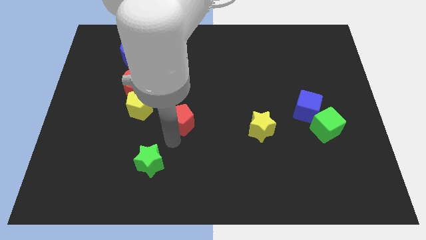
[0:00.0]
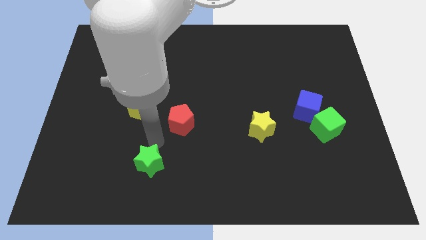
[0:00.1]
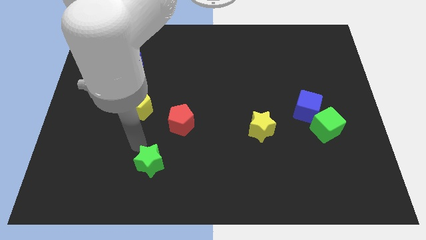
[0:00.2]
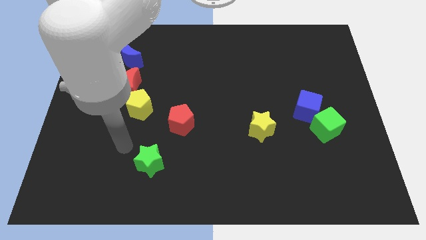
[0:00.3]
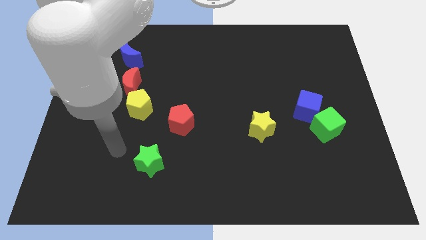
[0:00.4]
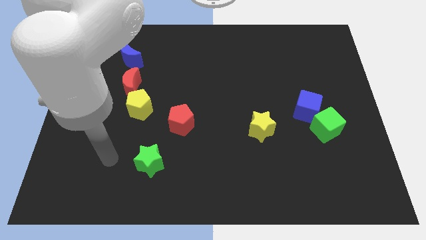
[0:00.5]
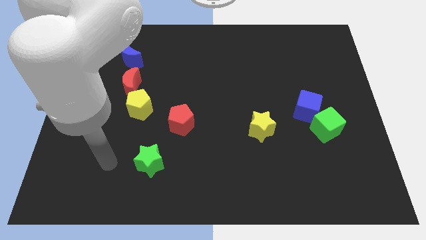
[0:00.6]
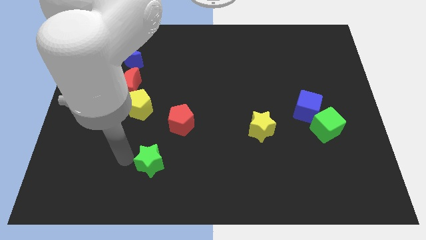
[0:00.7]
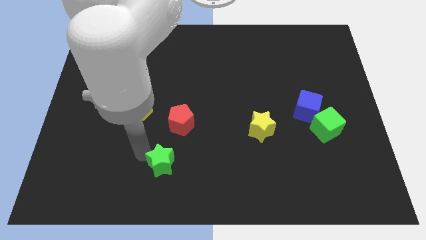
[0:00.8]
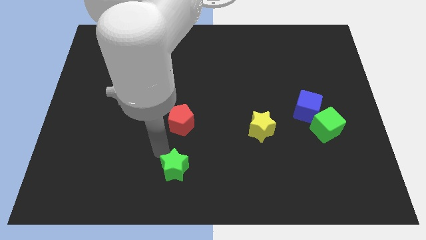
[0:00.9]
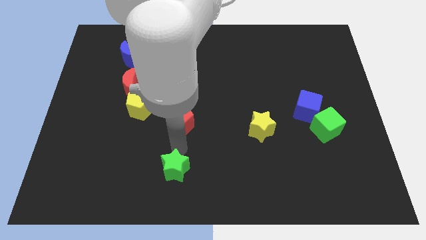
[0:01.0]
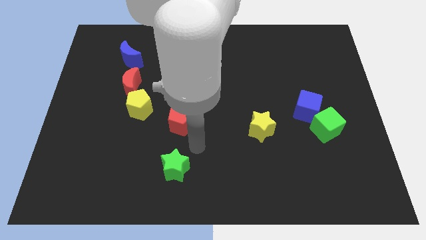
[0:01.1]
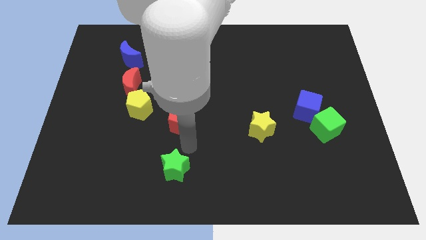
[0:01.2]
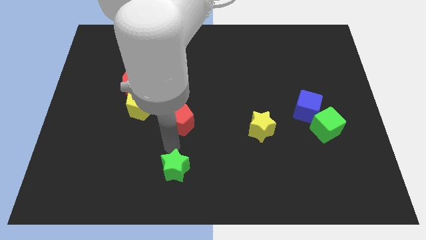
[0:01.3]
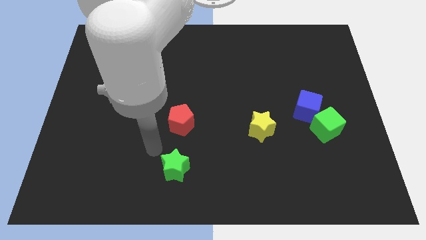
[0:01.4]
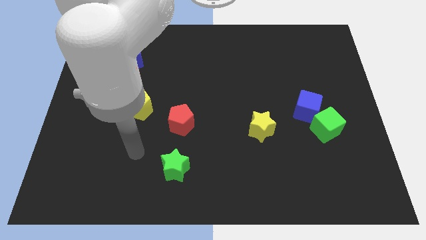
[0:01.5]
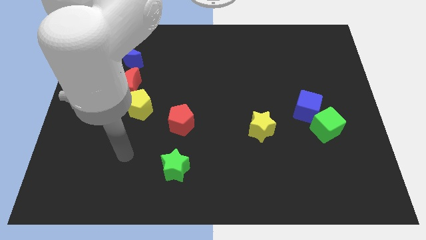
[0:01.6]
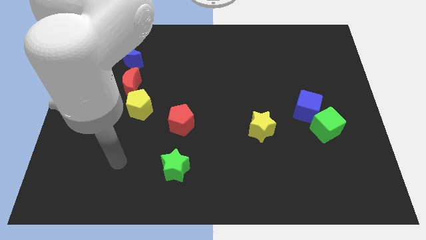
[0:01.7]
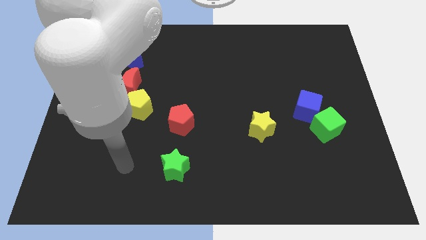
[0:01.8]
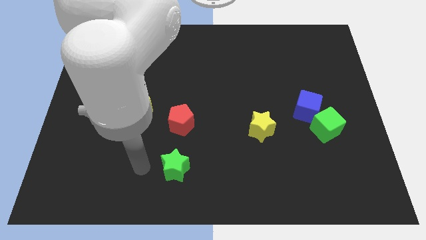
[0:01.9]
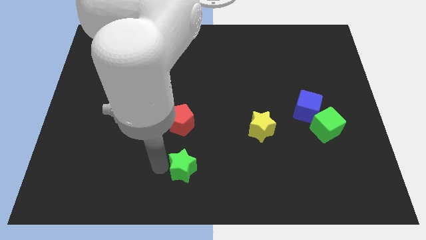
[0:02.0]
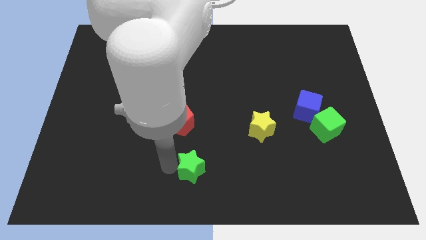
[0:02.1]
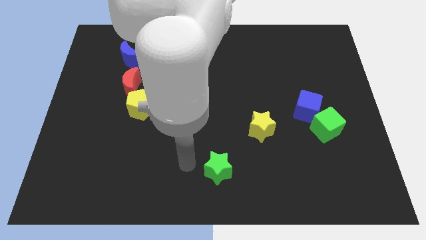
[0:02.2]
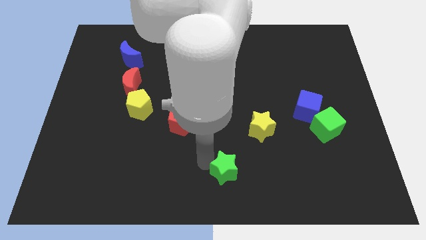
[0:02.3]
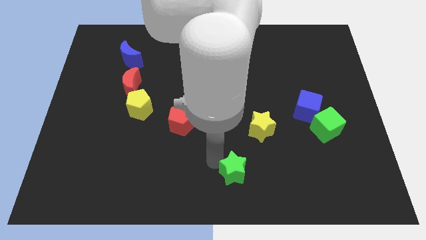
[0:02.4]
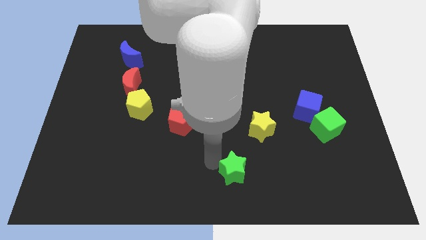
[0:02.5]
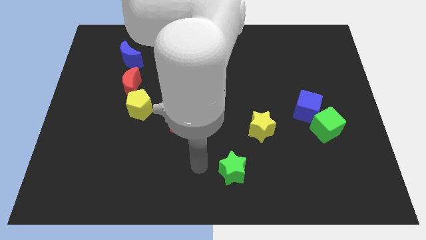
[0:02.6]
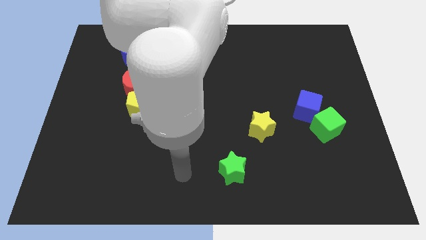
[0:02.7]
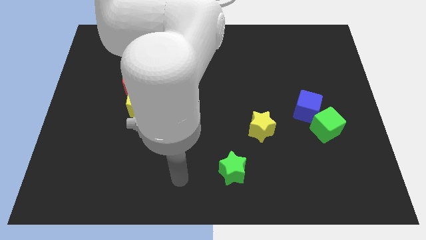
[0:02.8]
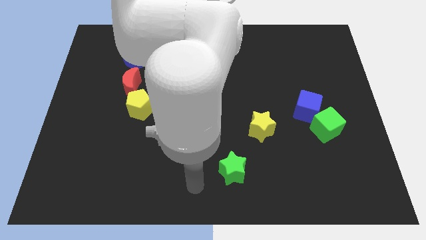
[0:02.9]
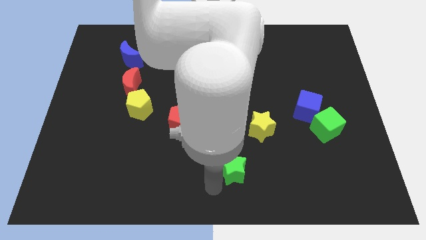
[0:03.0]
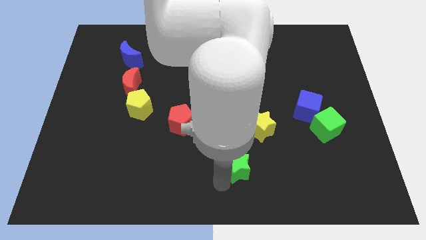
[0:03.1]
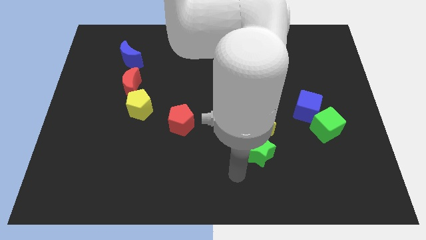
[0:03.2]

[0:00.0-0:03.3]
place green star at the bottom of yellow star

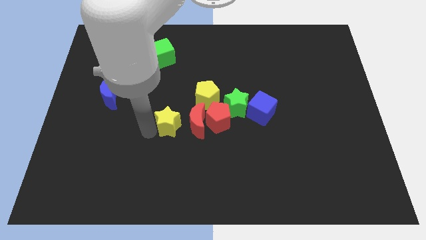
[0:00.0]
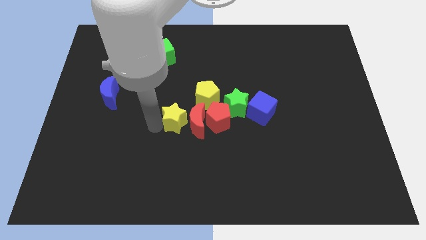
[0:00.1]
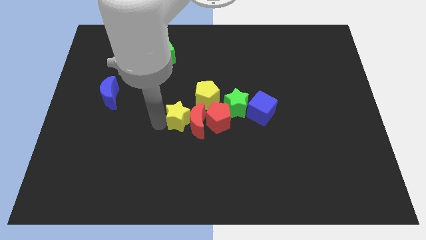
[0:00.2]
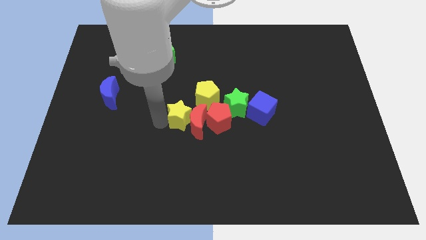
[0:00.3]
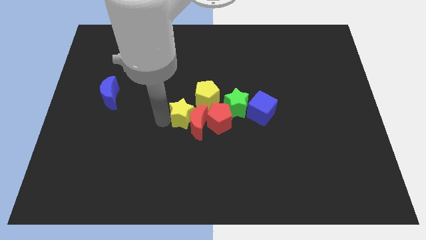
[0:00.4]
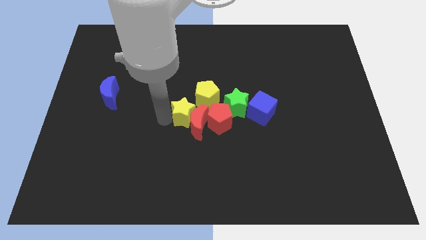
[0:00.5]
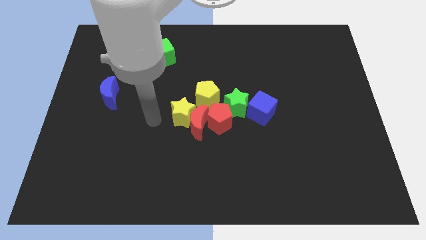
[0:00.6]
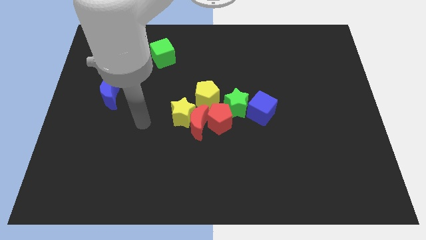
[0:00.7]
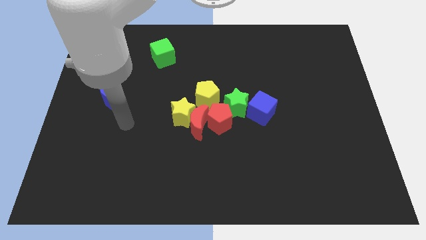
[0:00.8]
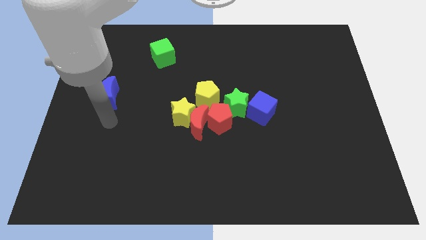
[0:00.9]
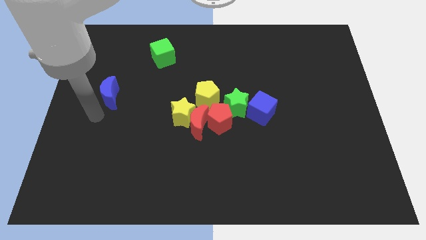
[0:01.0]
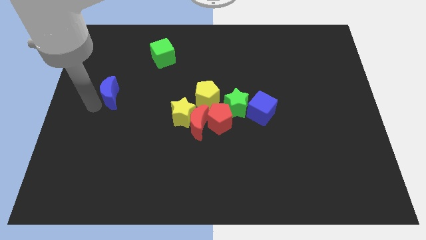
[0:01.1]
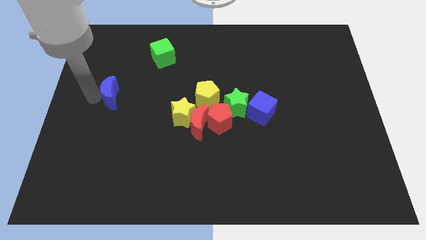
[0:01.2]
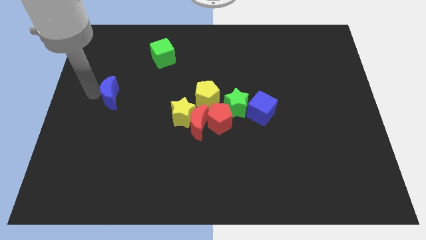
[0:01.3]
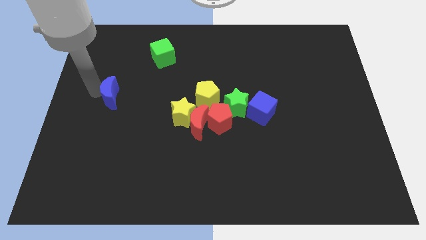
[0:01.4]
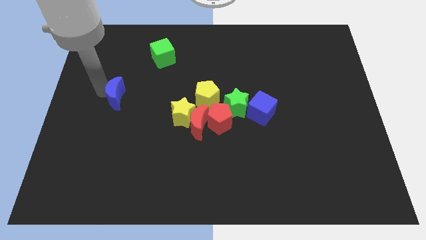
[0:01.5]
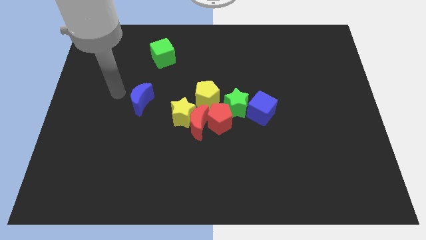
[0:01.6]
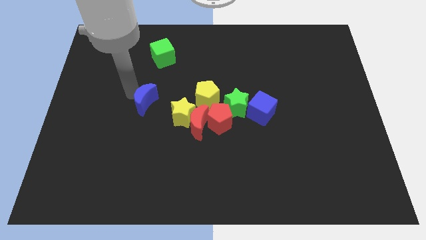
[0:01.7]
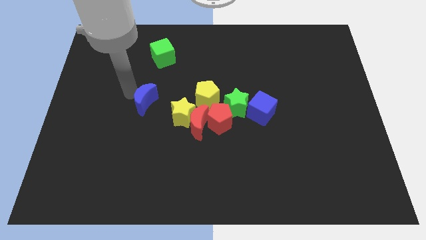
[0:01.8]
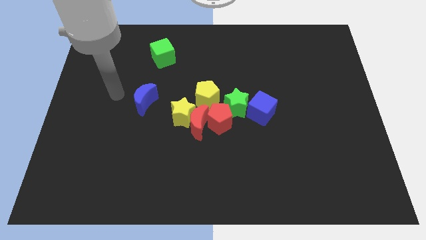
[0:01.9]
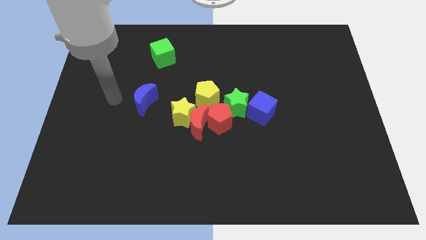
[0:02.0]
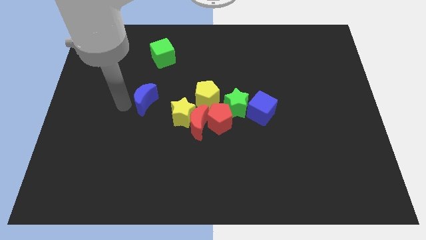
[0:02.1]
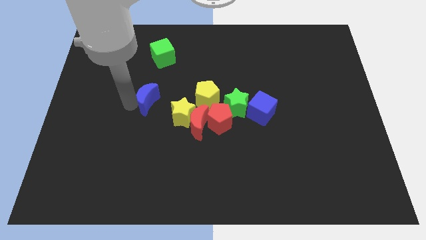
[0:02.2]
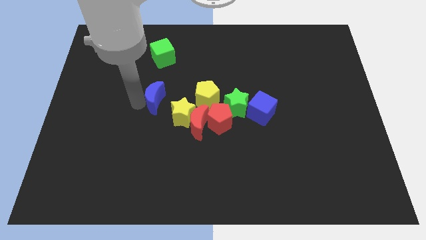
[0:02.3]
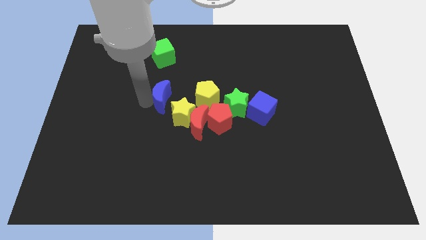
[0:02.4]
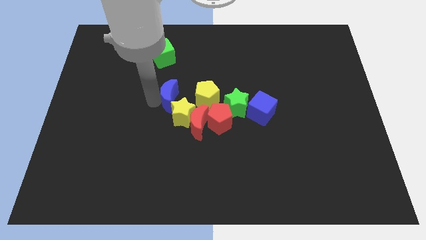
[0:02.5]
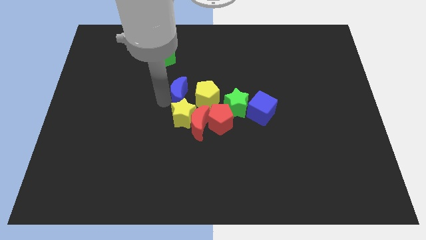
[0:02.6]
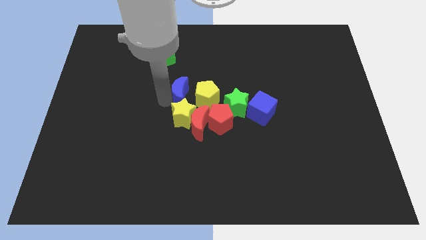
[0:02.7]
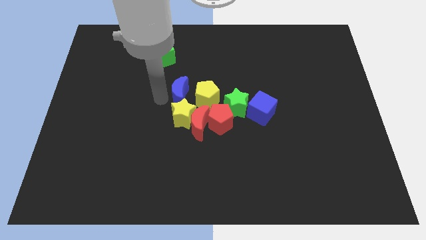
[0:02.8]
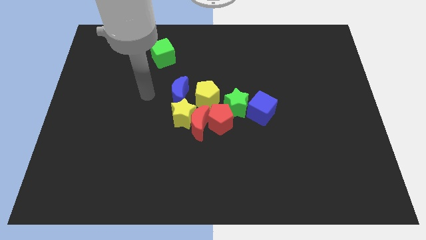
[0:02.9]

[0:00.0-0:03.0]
push the yellow star into red moon

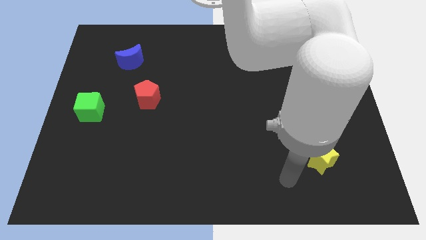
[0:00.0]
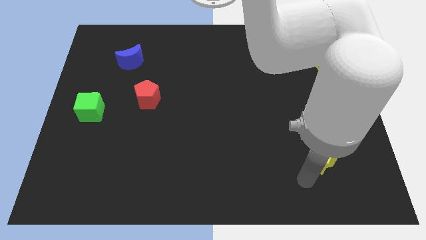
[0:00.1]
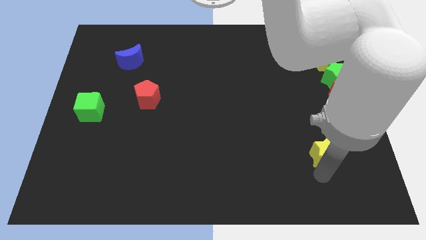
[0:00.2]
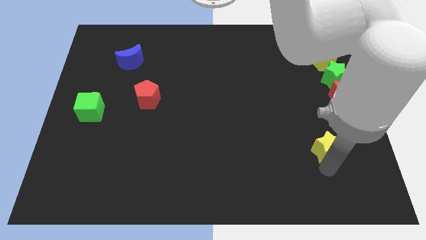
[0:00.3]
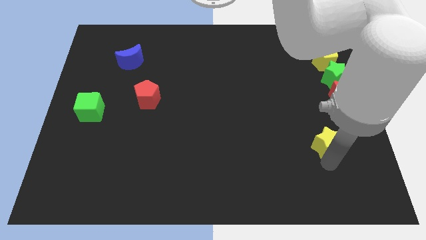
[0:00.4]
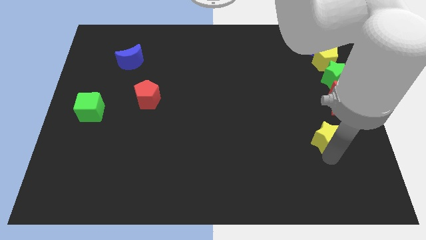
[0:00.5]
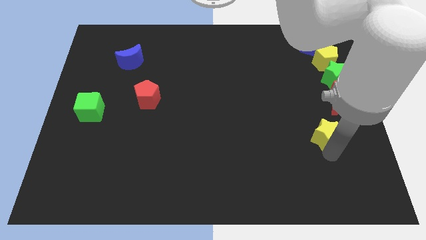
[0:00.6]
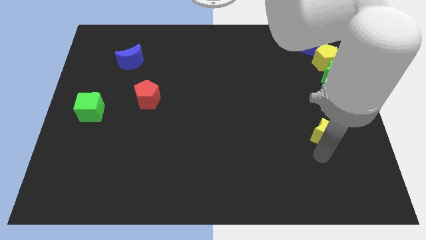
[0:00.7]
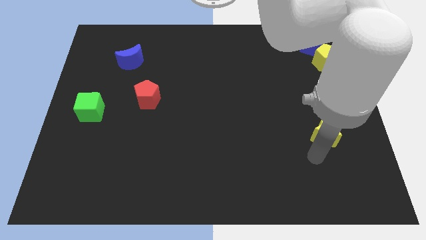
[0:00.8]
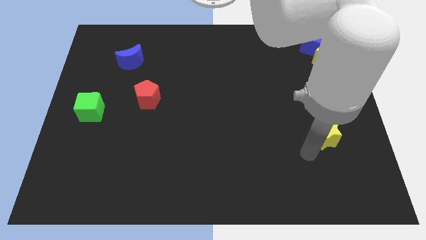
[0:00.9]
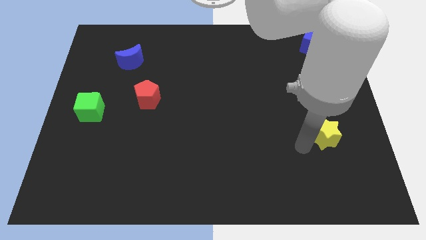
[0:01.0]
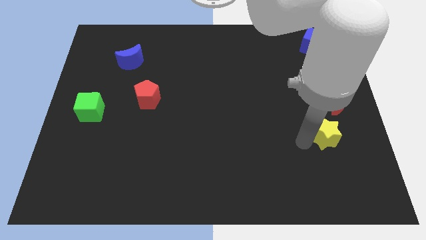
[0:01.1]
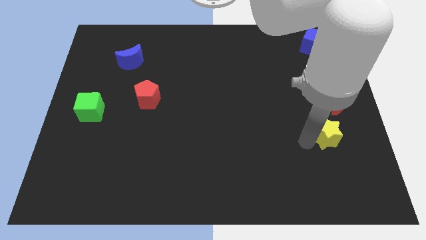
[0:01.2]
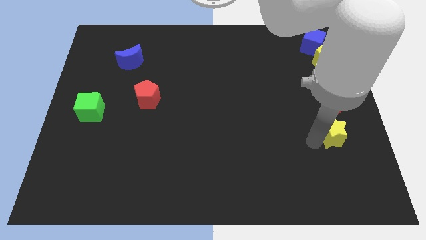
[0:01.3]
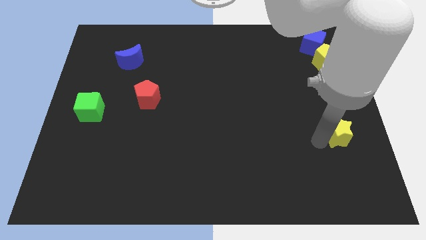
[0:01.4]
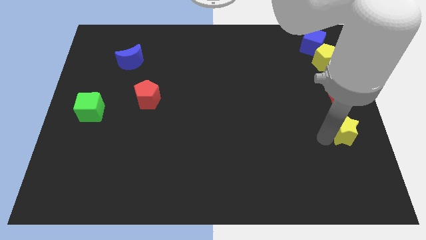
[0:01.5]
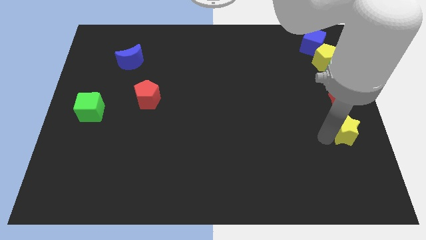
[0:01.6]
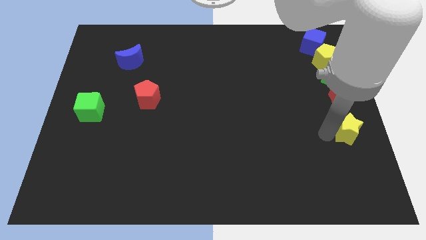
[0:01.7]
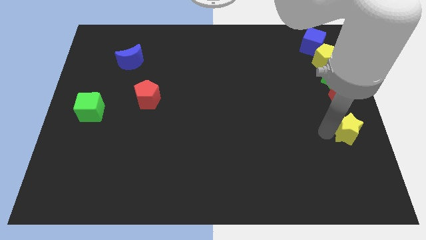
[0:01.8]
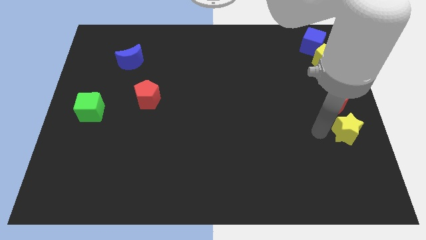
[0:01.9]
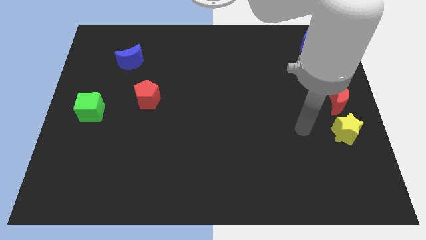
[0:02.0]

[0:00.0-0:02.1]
push the yellow star below the red moon

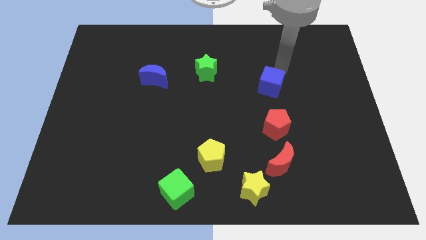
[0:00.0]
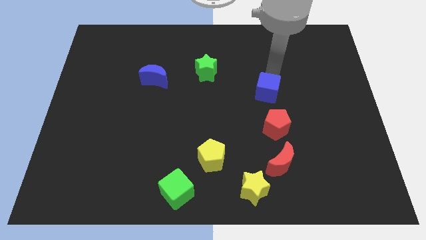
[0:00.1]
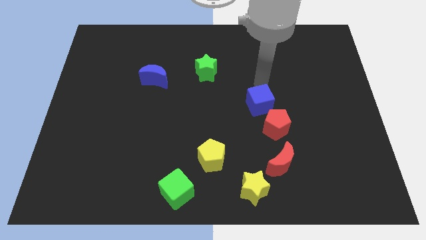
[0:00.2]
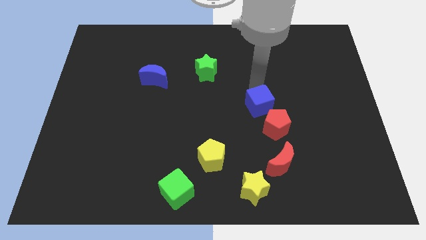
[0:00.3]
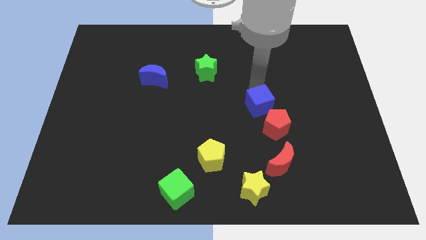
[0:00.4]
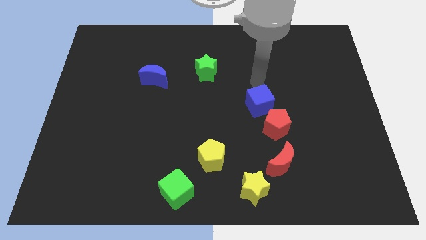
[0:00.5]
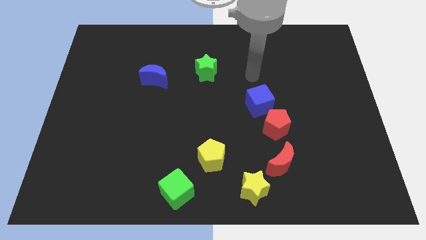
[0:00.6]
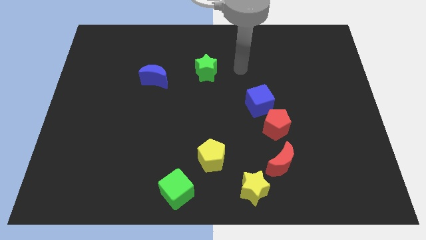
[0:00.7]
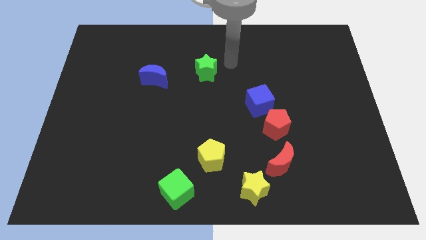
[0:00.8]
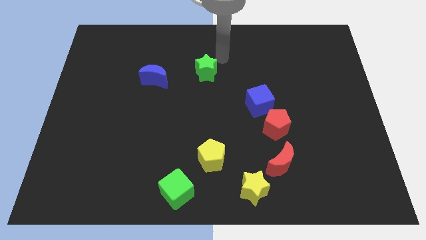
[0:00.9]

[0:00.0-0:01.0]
push the blue cube diagonally top left to red pentagon
